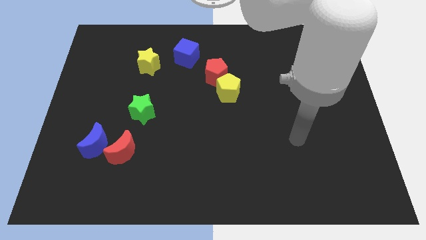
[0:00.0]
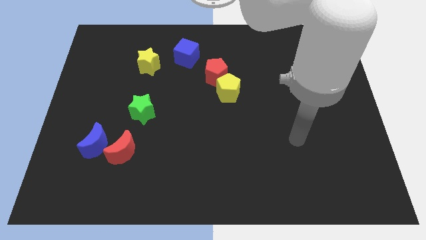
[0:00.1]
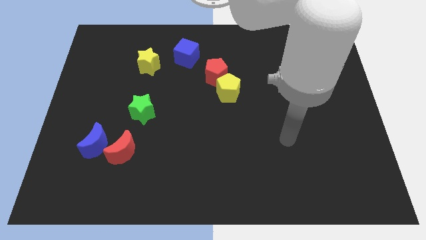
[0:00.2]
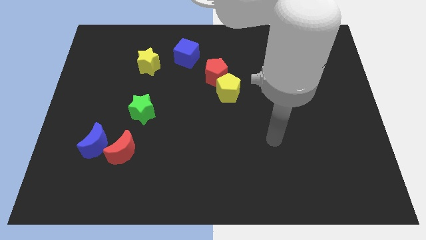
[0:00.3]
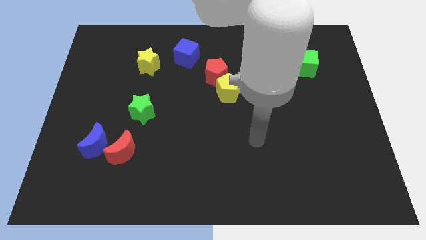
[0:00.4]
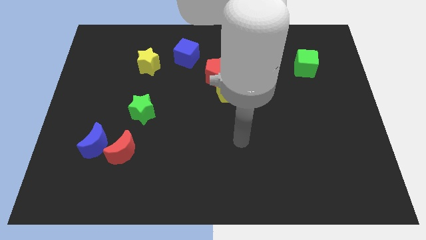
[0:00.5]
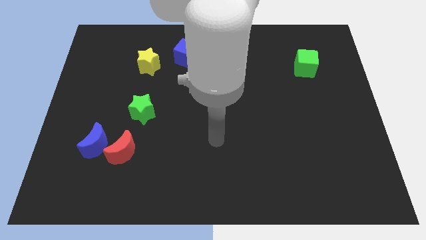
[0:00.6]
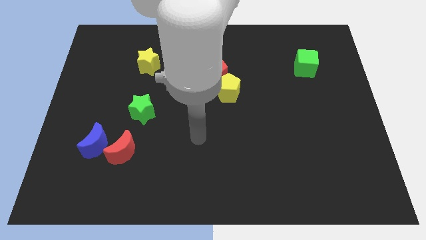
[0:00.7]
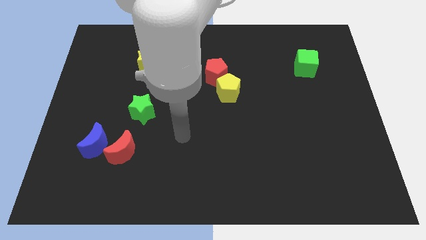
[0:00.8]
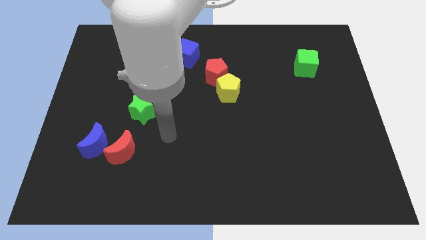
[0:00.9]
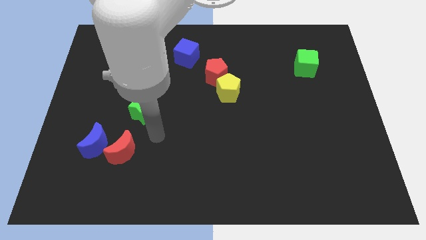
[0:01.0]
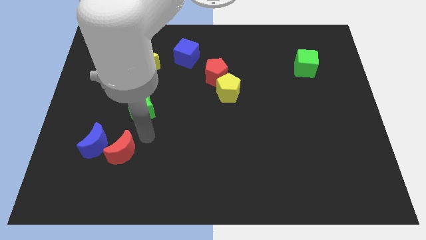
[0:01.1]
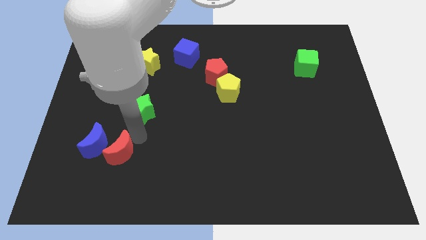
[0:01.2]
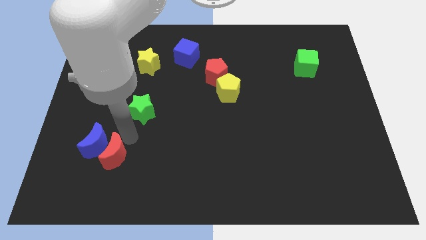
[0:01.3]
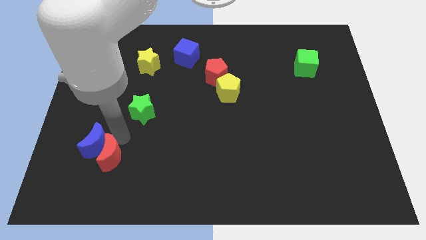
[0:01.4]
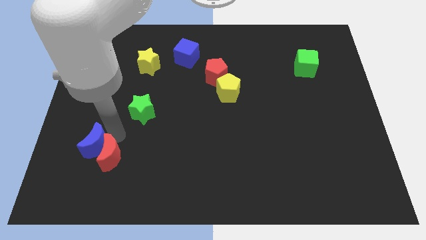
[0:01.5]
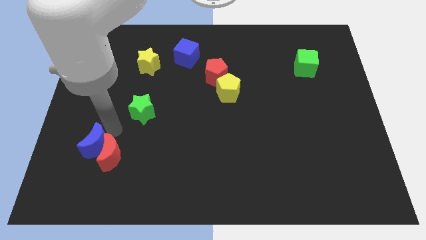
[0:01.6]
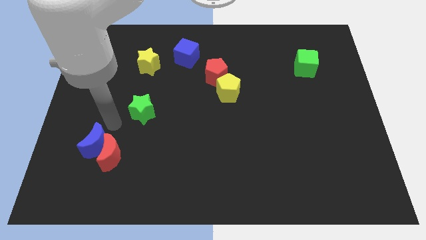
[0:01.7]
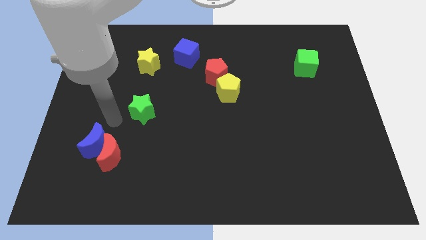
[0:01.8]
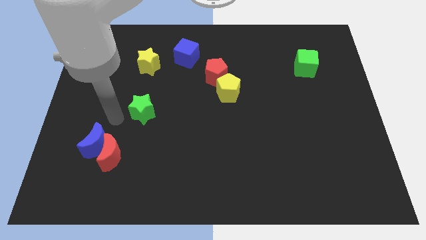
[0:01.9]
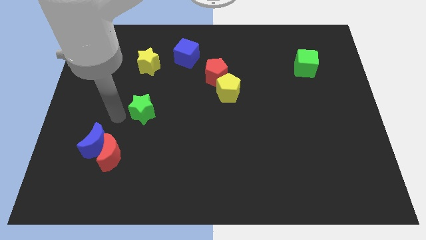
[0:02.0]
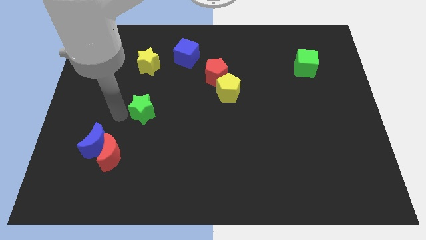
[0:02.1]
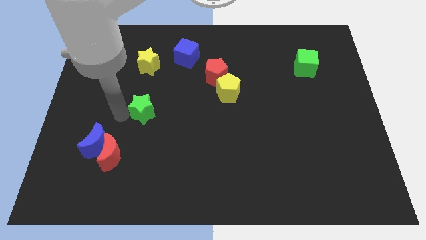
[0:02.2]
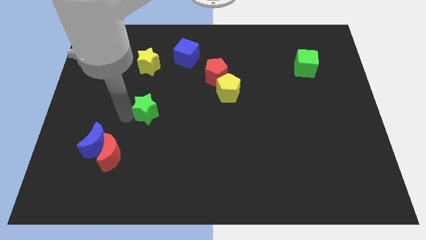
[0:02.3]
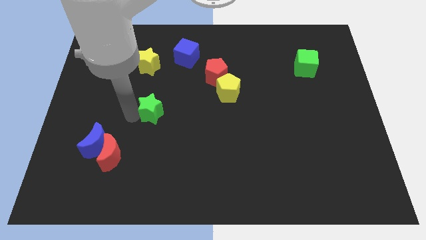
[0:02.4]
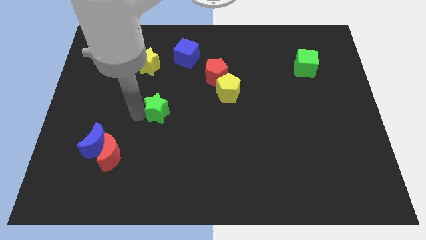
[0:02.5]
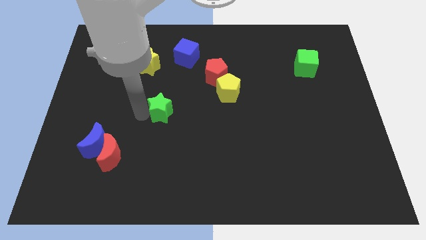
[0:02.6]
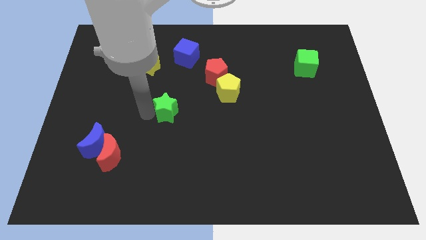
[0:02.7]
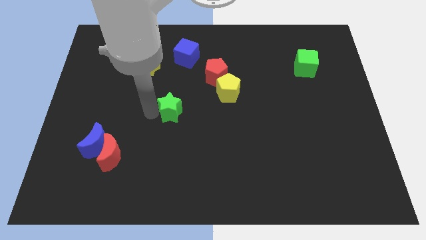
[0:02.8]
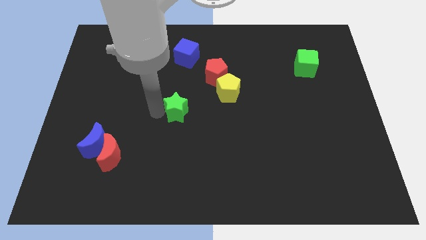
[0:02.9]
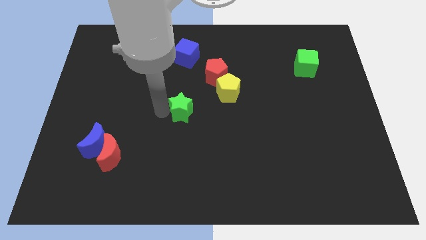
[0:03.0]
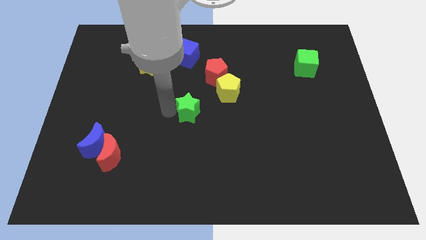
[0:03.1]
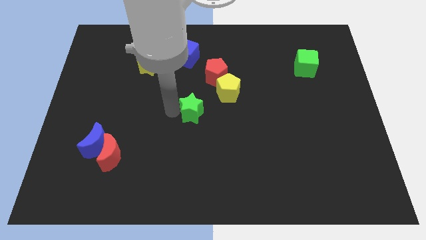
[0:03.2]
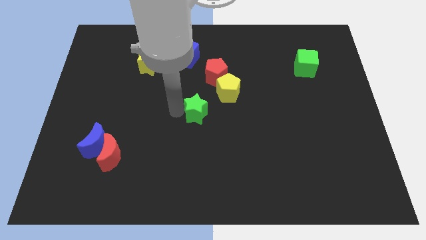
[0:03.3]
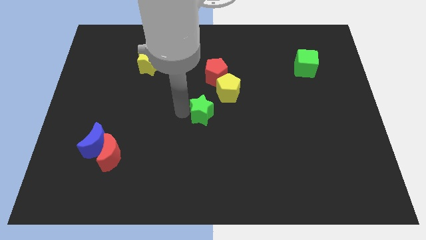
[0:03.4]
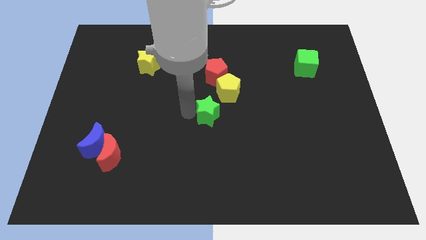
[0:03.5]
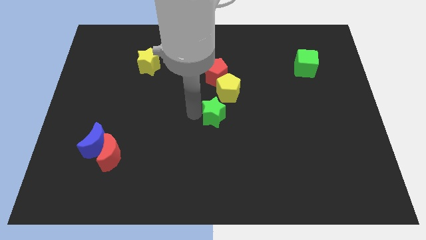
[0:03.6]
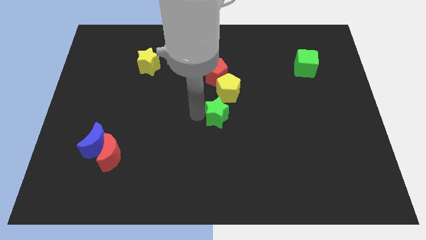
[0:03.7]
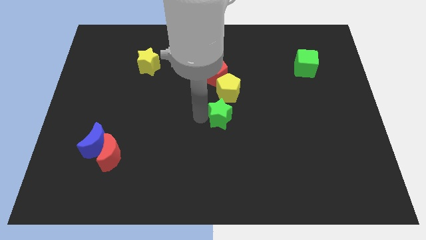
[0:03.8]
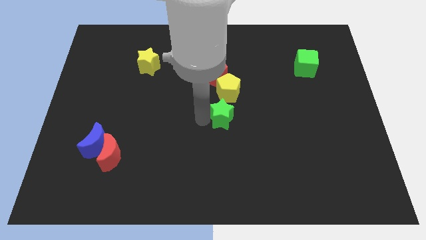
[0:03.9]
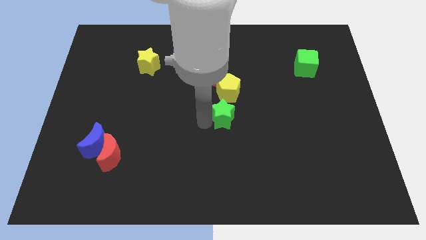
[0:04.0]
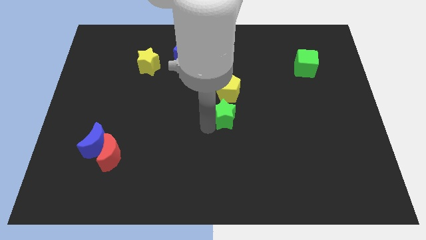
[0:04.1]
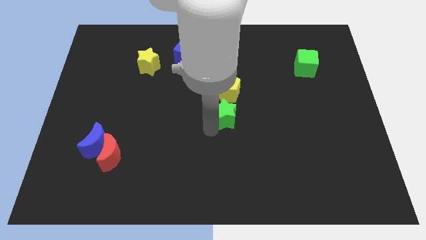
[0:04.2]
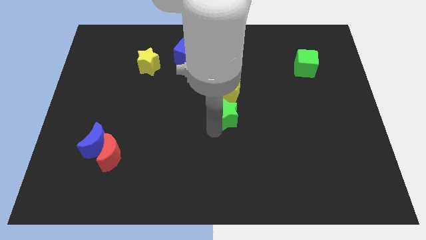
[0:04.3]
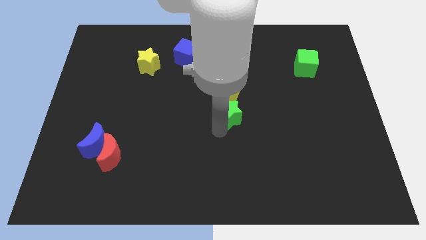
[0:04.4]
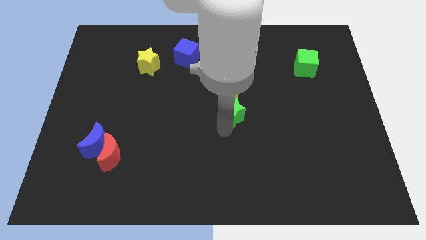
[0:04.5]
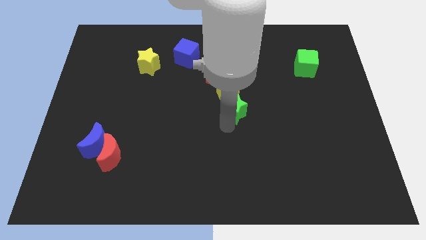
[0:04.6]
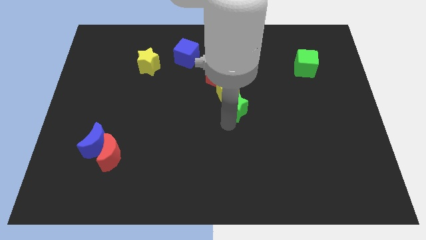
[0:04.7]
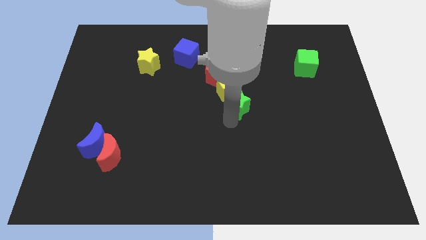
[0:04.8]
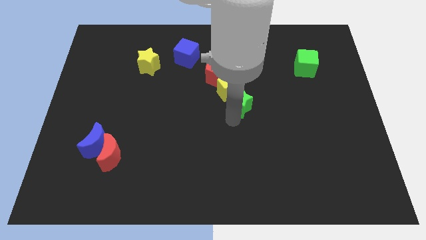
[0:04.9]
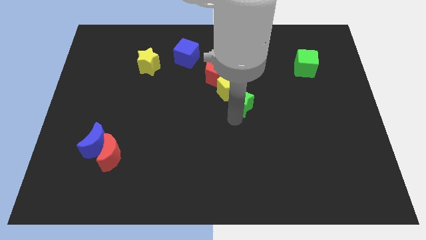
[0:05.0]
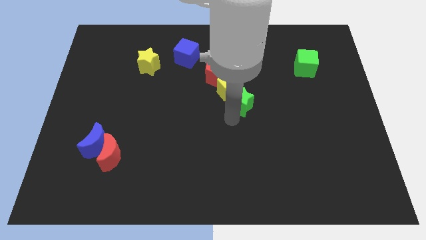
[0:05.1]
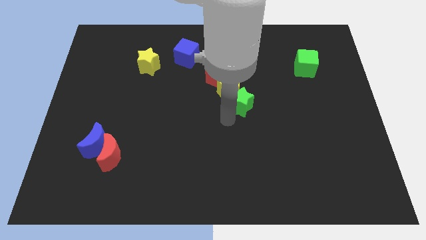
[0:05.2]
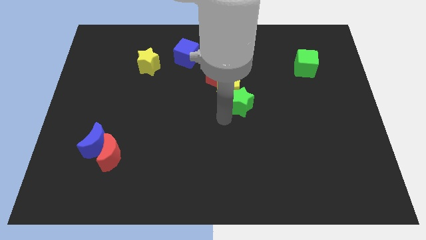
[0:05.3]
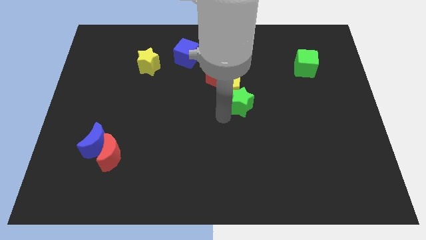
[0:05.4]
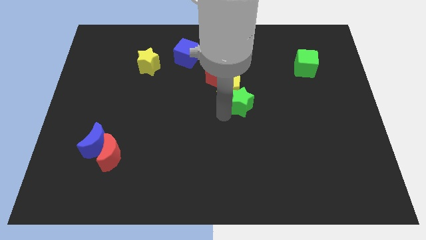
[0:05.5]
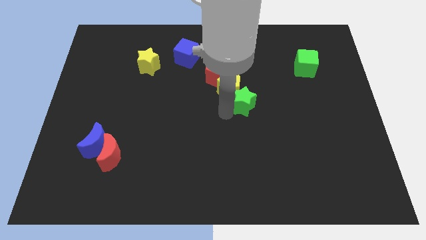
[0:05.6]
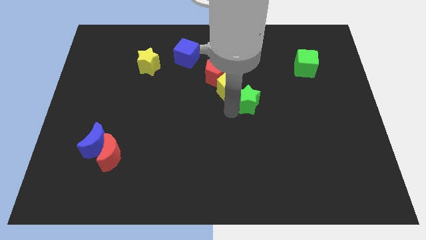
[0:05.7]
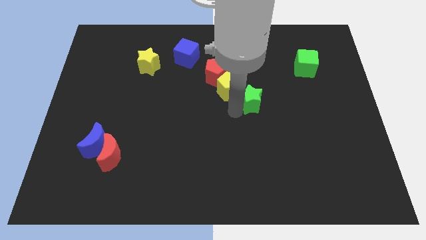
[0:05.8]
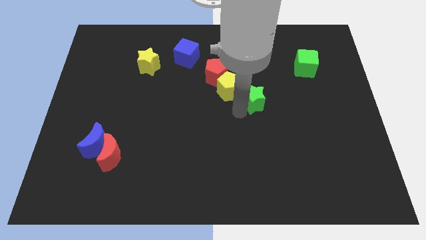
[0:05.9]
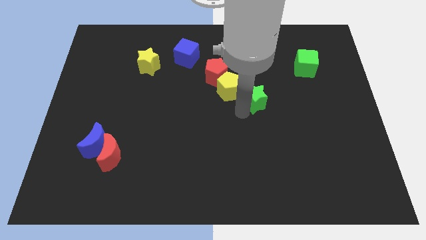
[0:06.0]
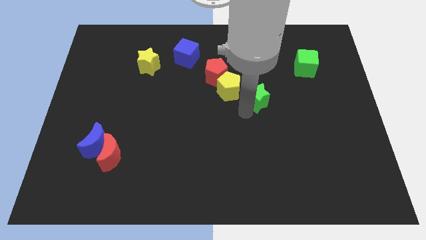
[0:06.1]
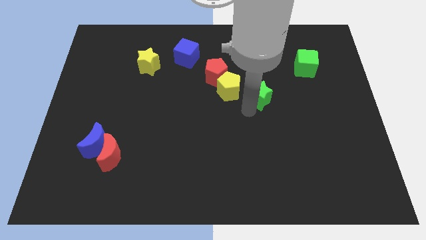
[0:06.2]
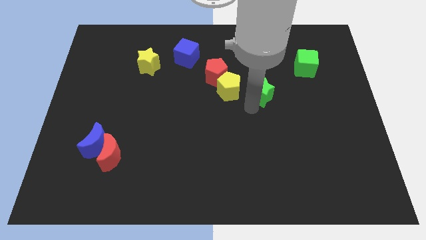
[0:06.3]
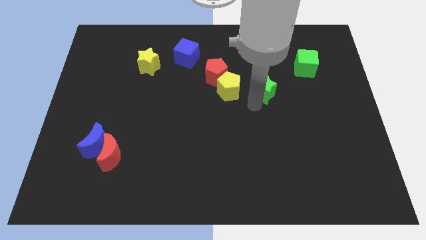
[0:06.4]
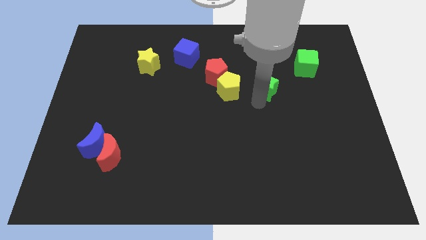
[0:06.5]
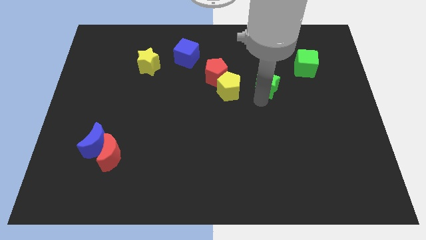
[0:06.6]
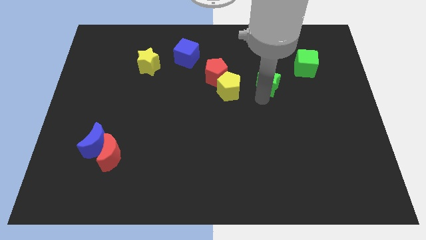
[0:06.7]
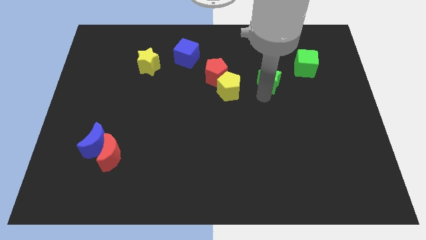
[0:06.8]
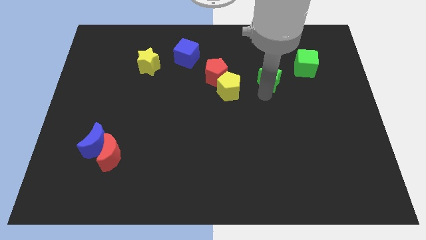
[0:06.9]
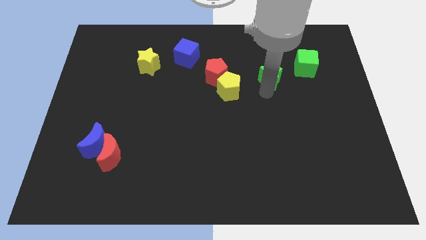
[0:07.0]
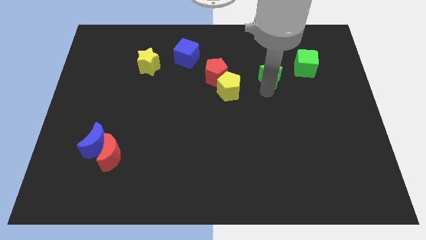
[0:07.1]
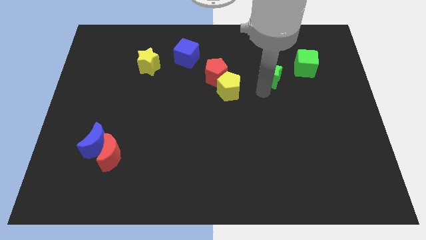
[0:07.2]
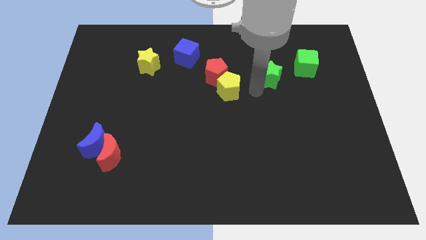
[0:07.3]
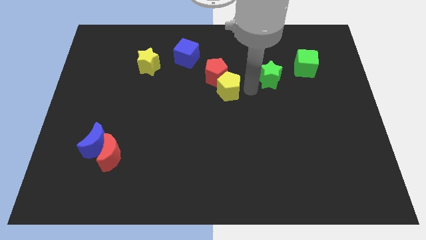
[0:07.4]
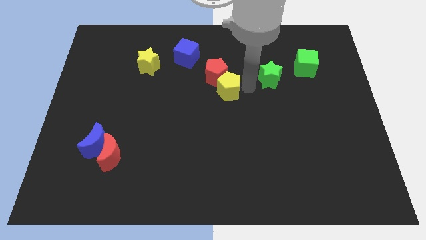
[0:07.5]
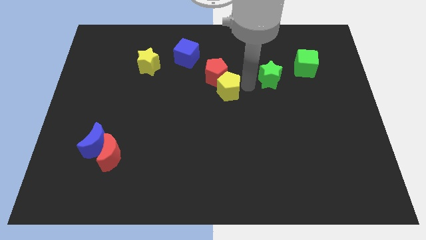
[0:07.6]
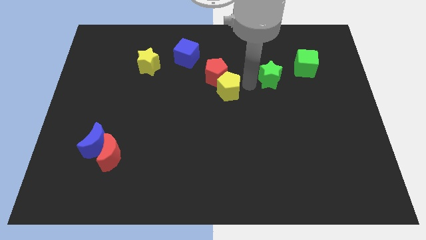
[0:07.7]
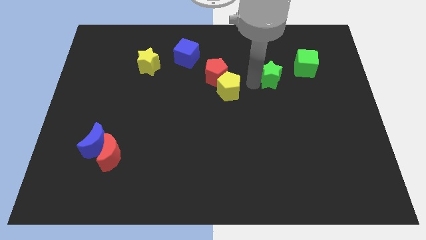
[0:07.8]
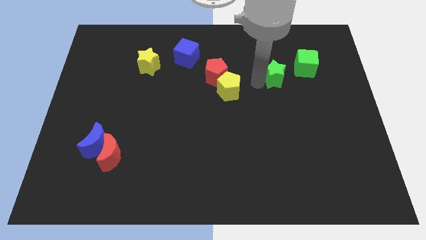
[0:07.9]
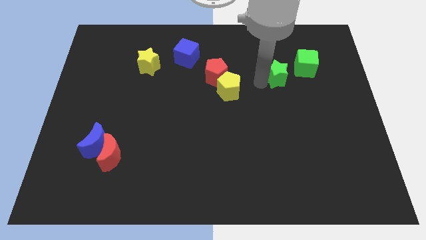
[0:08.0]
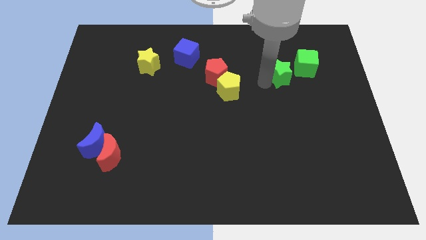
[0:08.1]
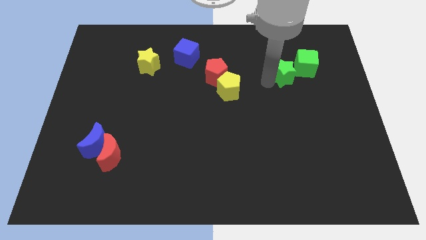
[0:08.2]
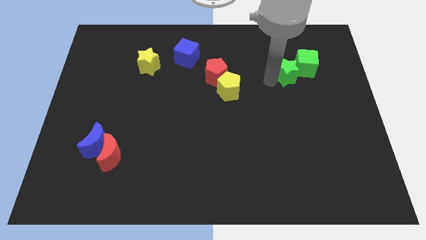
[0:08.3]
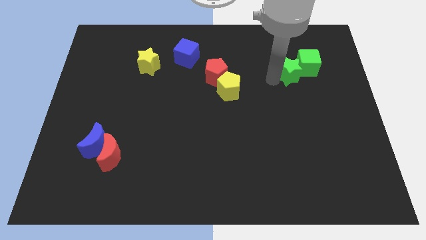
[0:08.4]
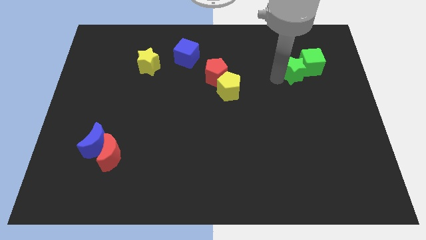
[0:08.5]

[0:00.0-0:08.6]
slide the green star towards the green cube
